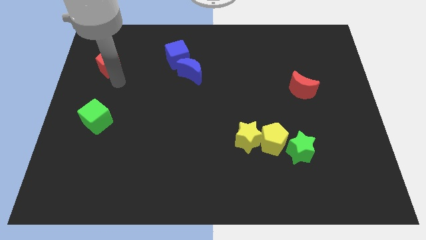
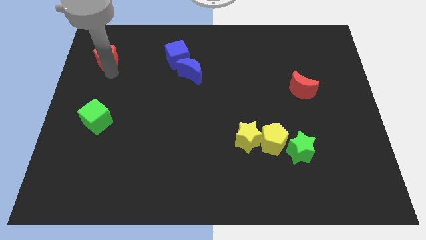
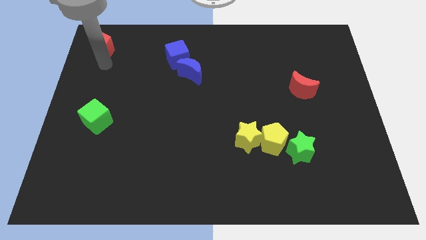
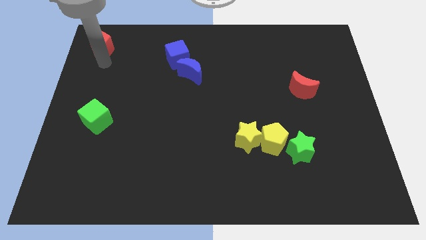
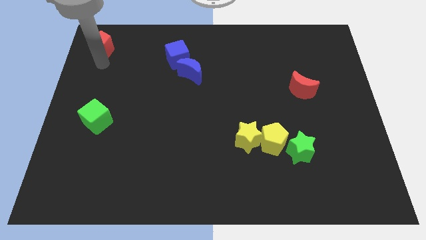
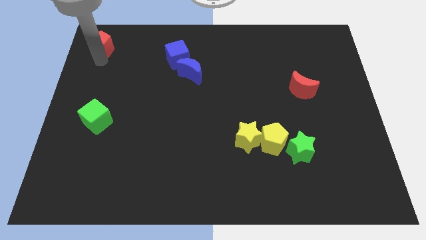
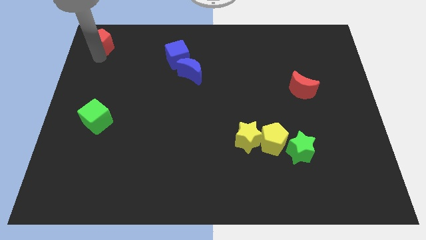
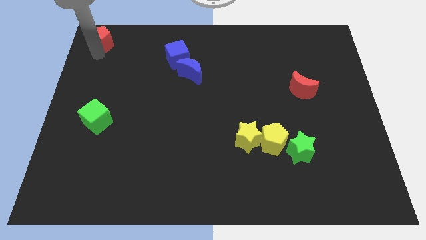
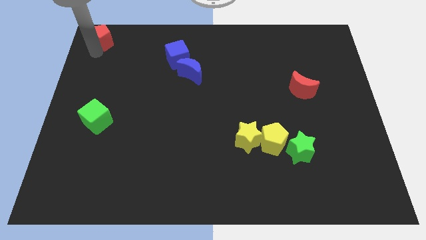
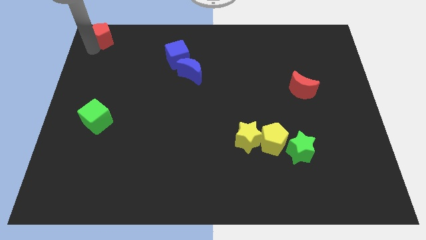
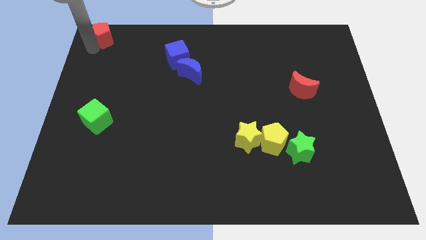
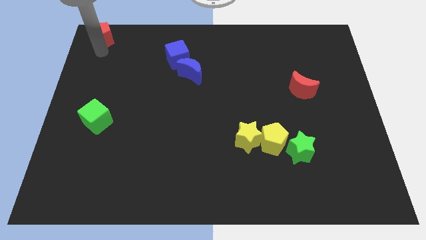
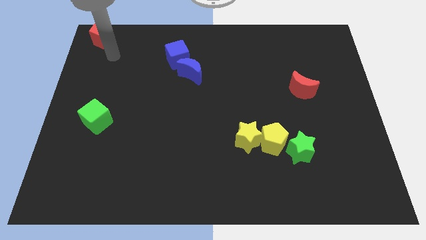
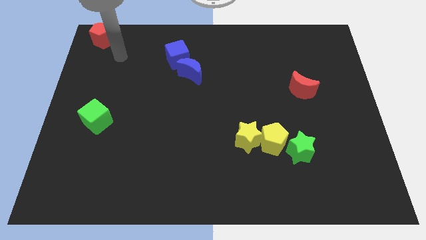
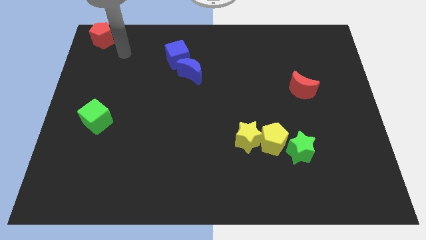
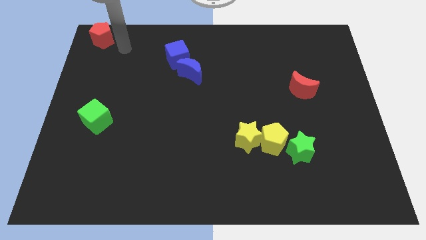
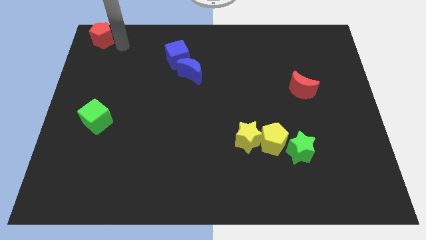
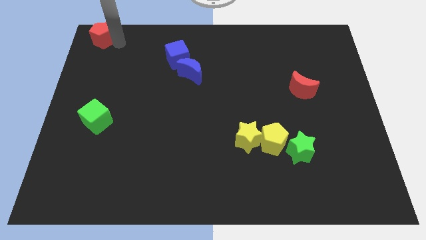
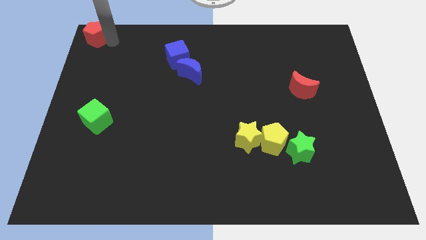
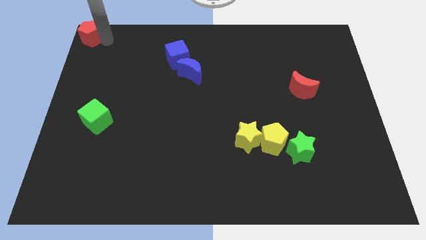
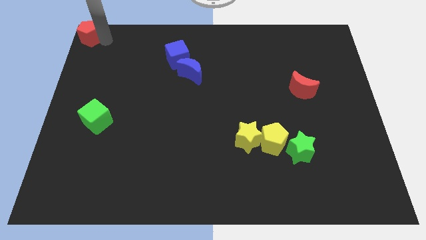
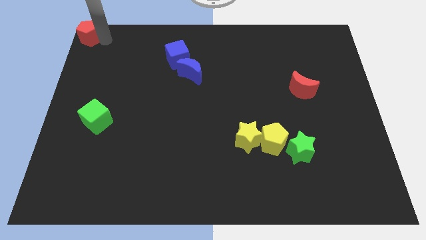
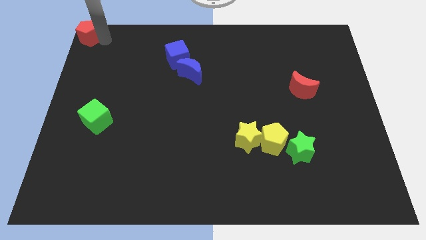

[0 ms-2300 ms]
push the red pentagon to the top left corner of the board

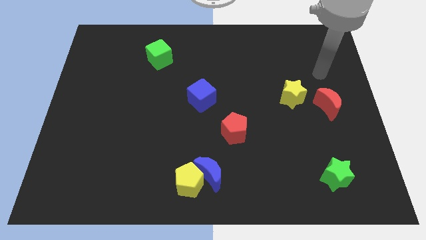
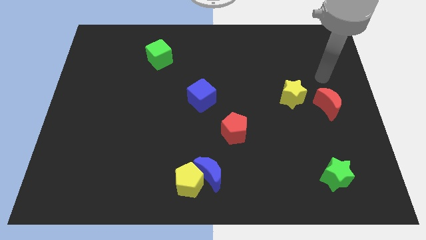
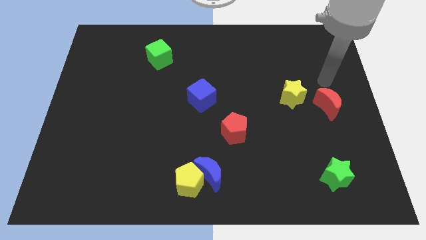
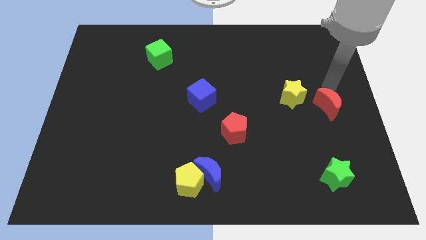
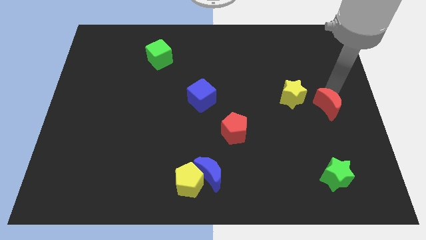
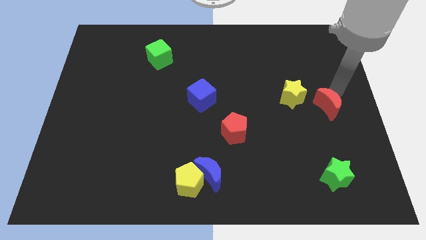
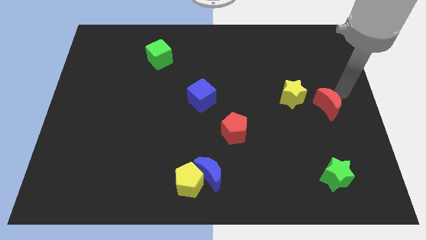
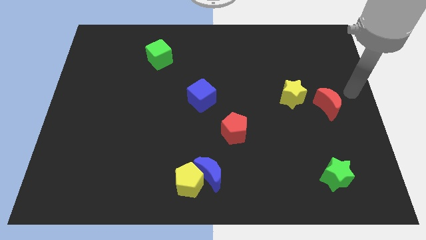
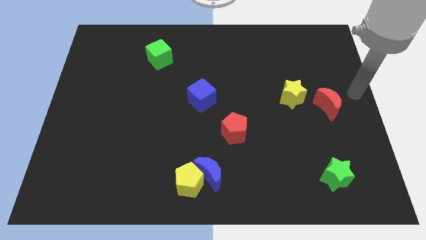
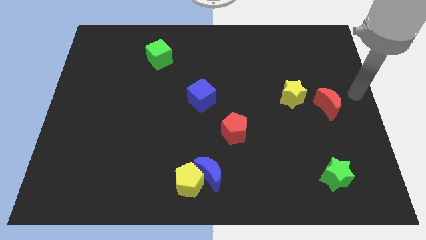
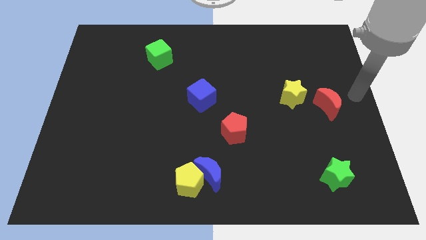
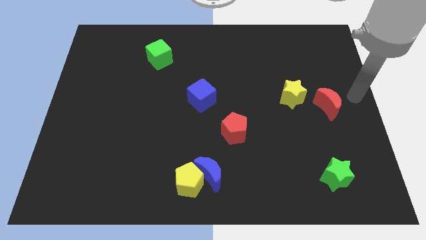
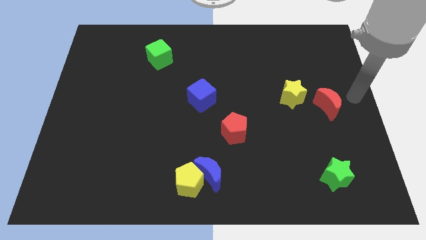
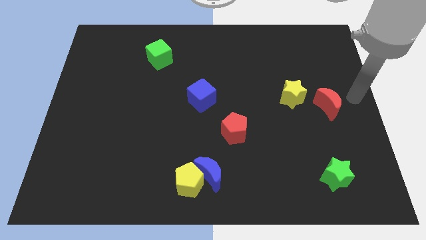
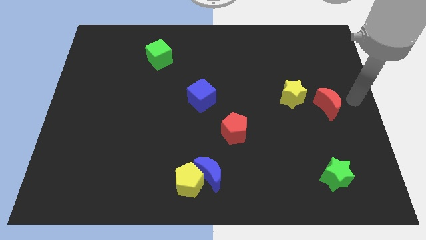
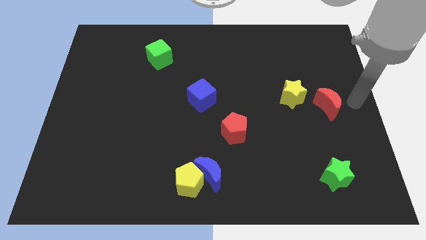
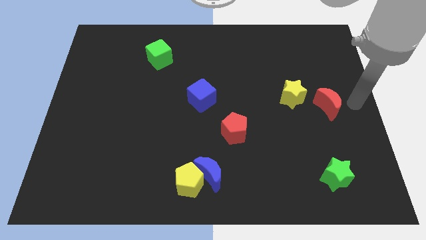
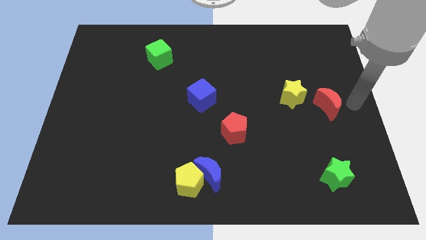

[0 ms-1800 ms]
move your arm to the right of the red crescent

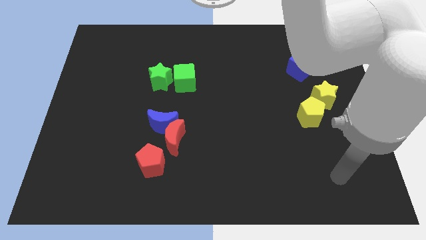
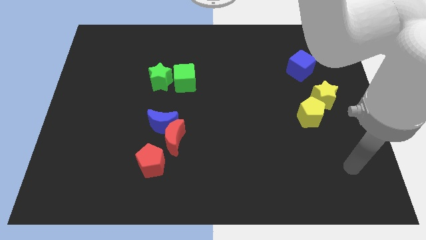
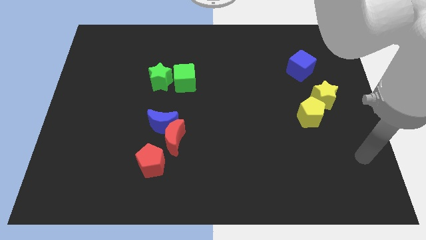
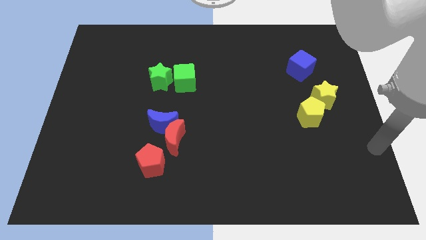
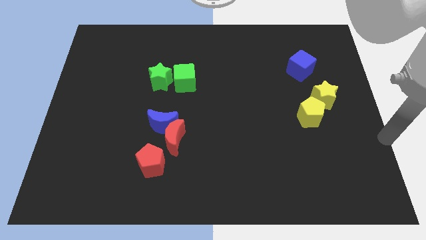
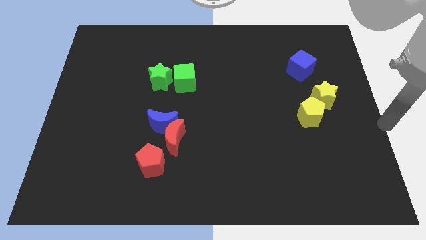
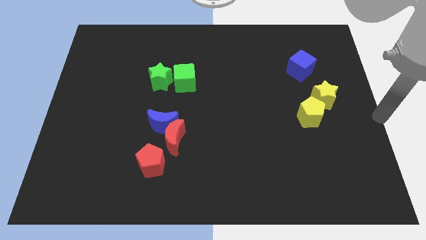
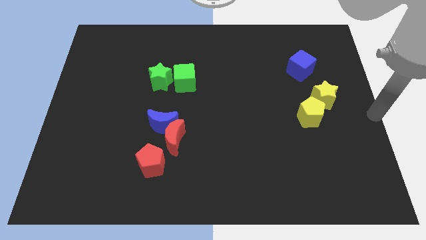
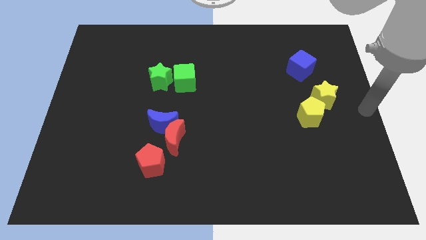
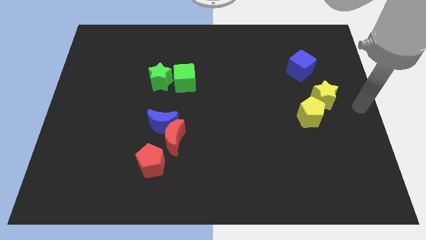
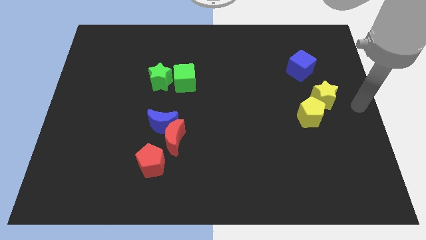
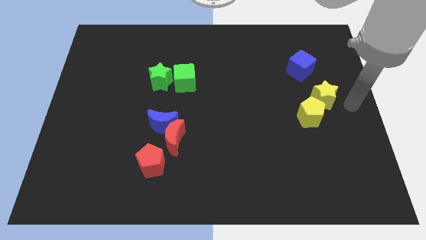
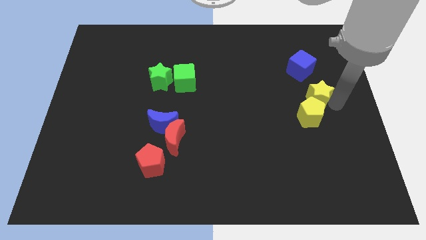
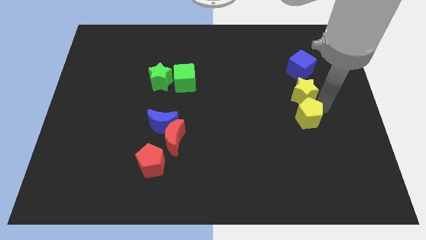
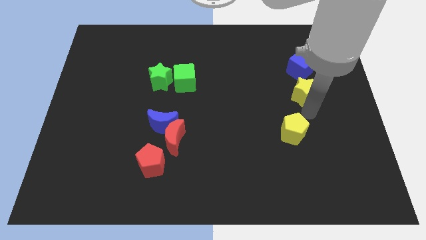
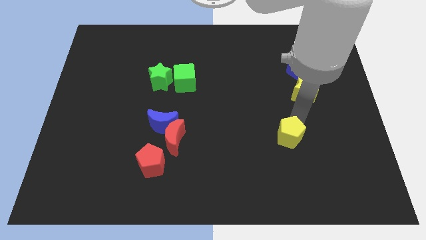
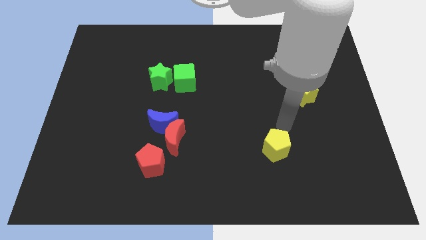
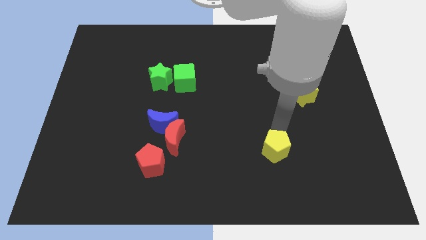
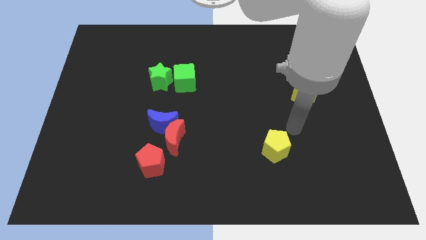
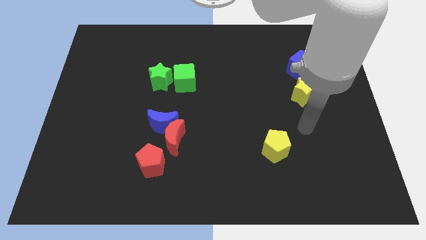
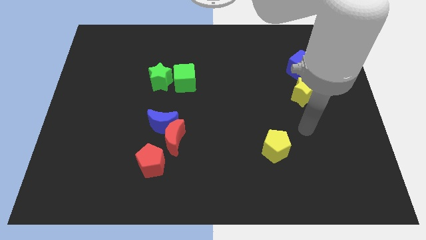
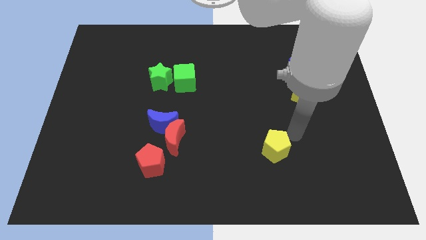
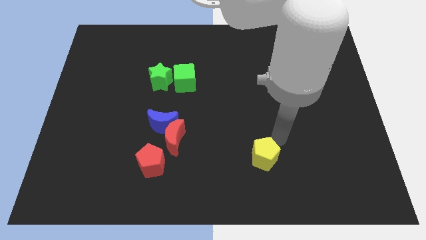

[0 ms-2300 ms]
separate the yellow pentagon from the yellow star

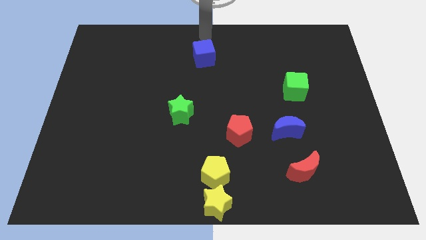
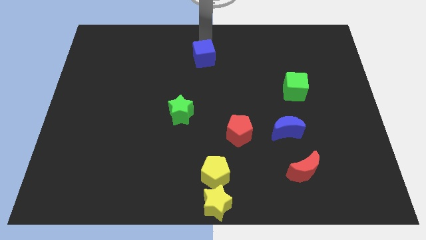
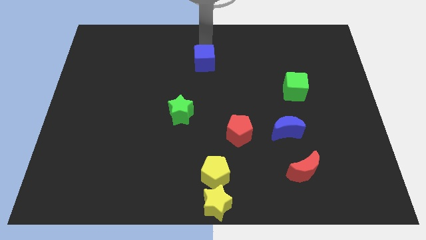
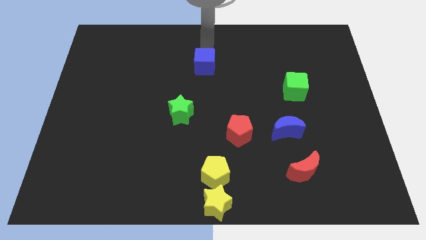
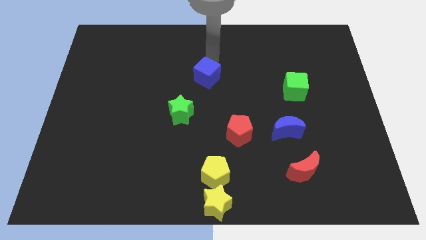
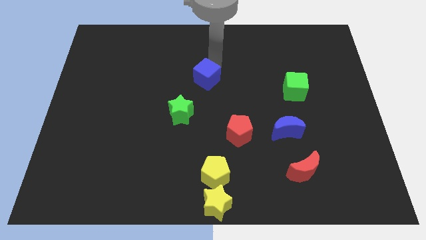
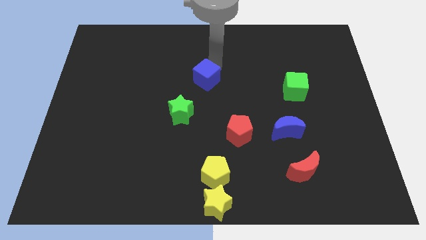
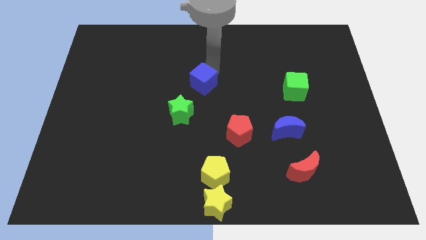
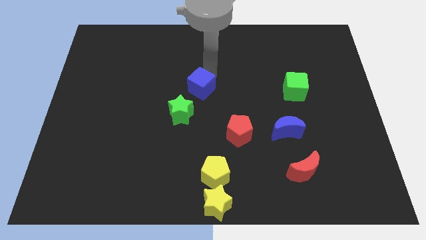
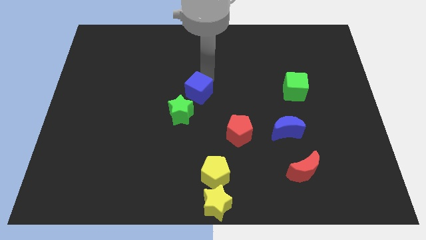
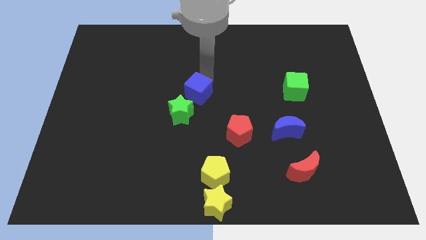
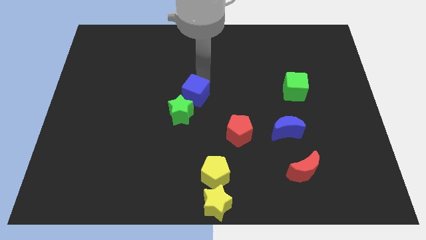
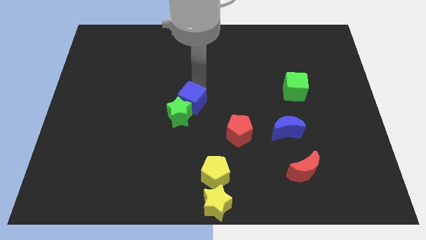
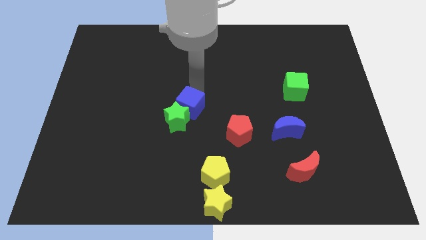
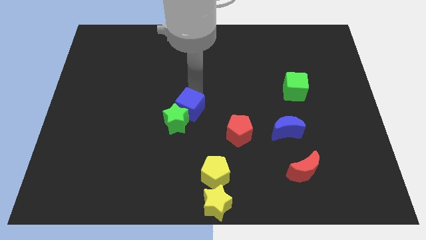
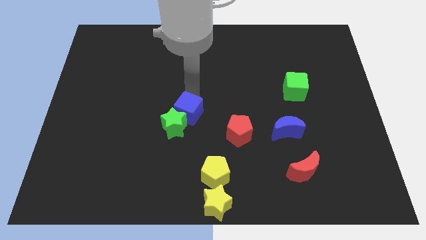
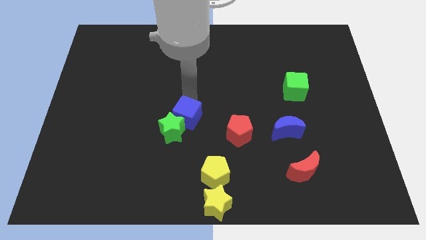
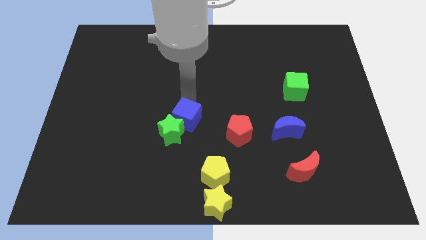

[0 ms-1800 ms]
move the blue cube into the green star

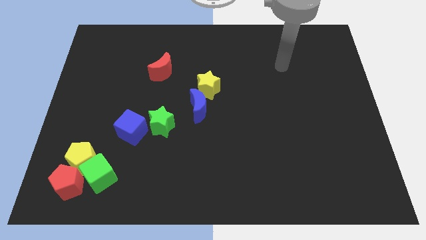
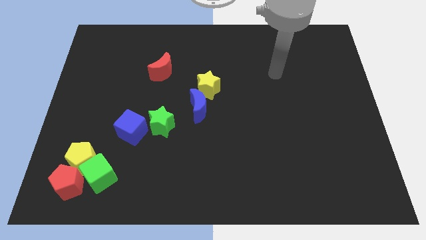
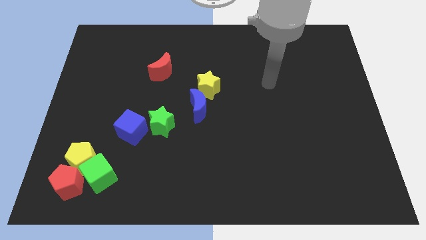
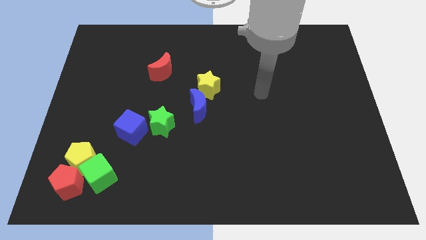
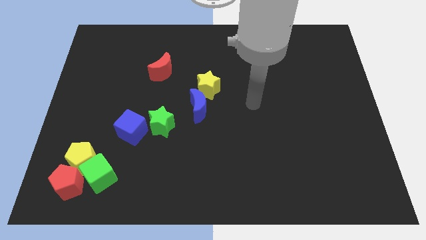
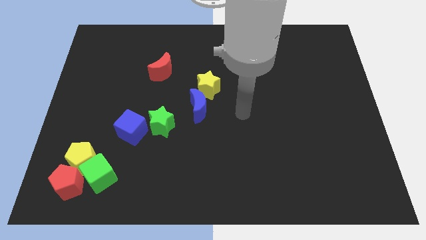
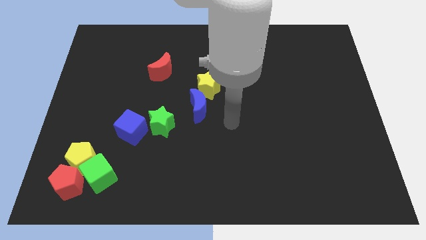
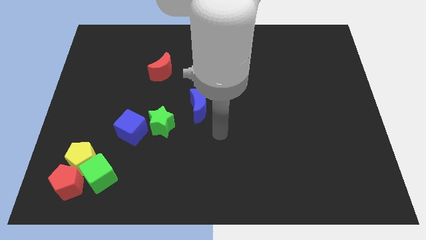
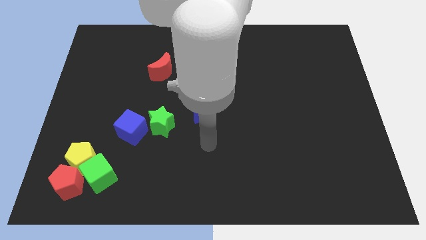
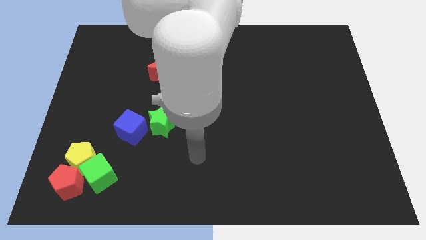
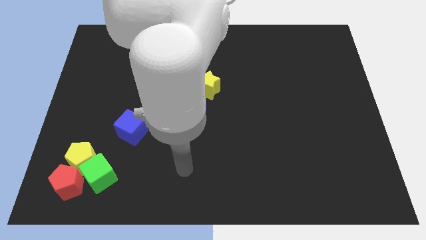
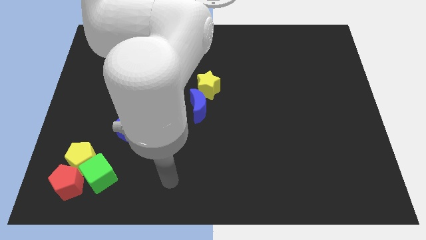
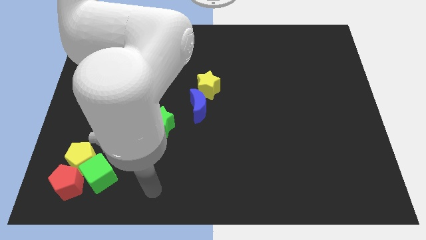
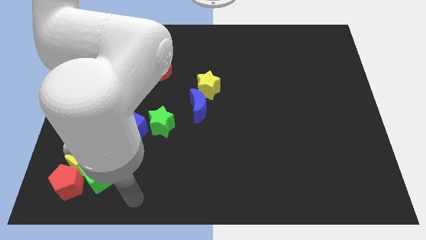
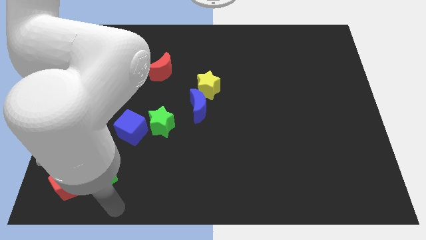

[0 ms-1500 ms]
move your arm close to the green cube
